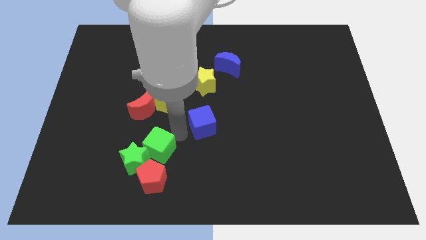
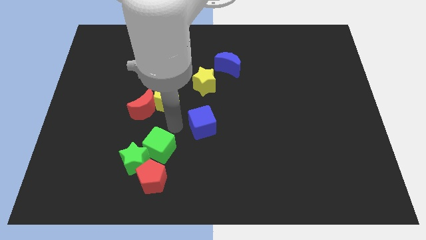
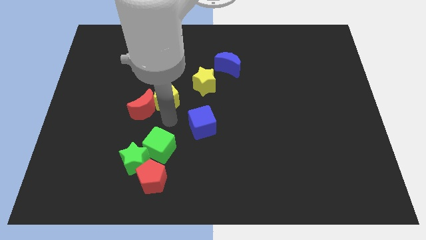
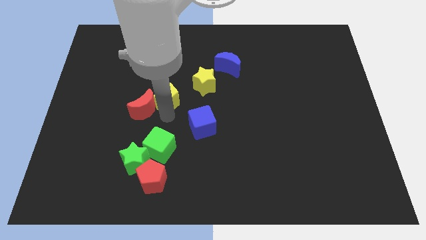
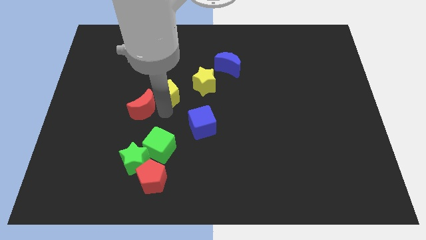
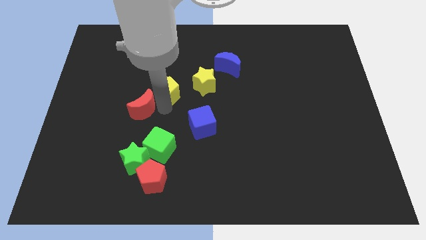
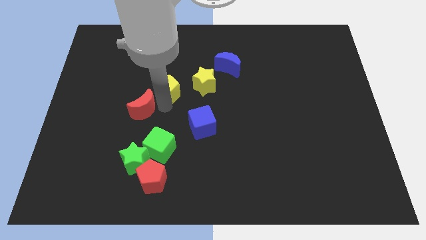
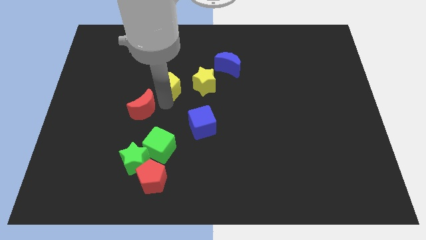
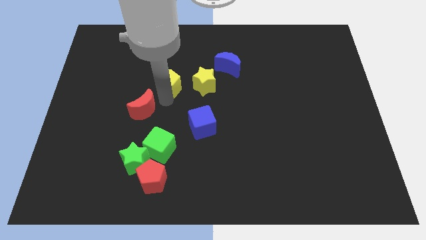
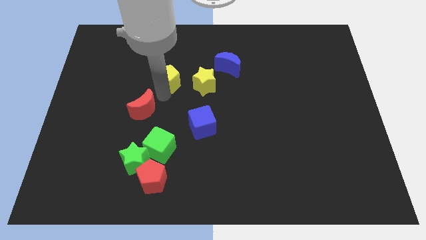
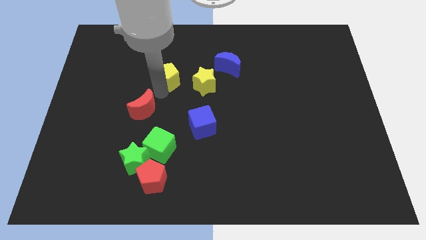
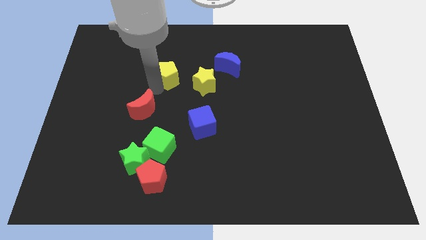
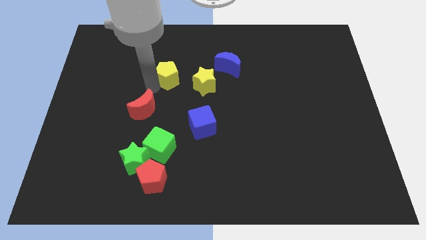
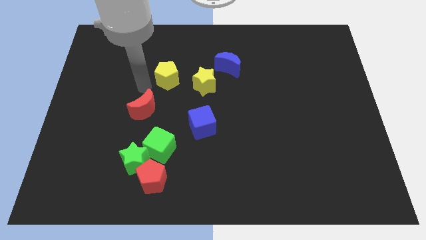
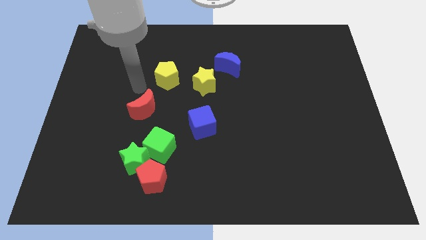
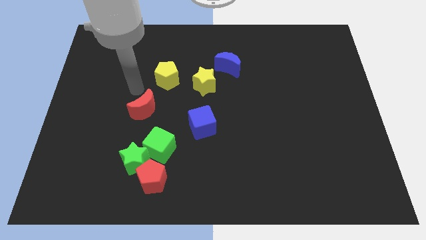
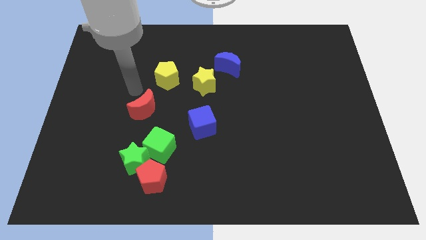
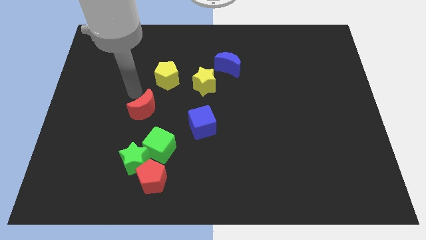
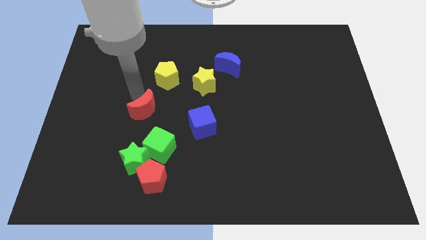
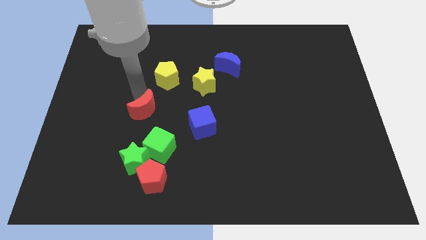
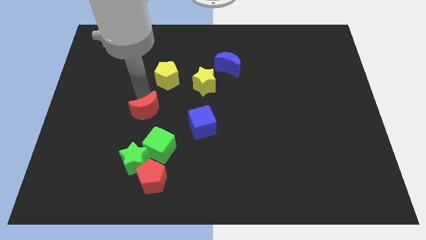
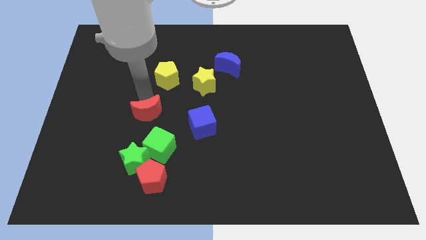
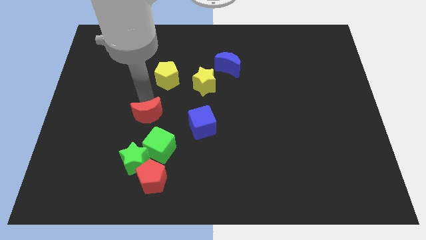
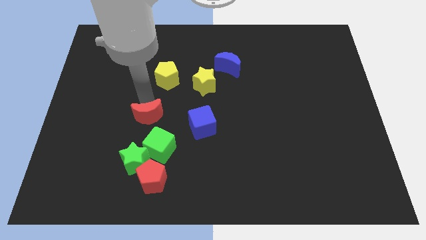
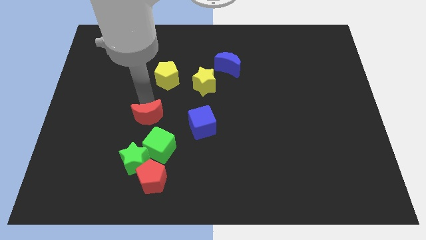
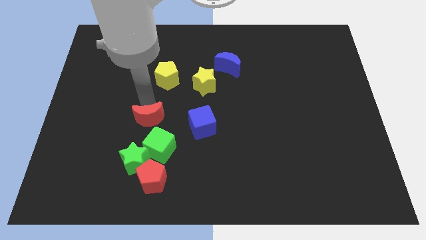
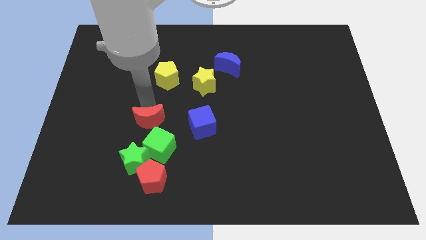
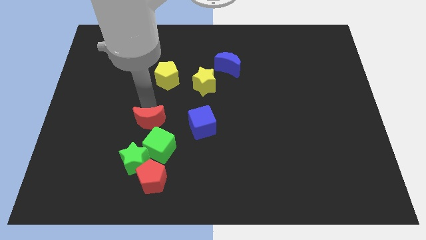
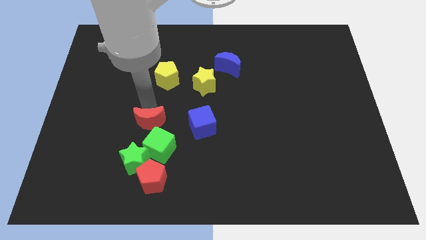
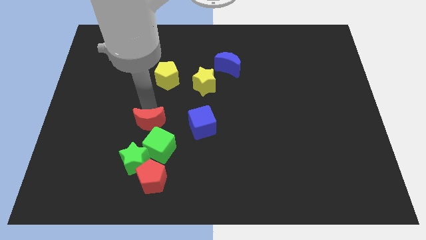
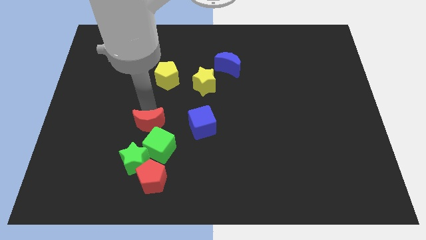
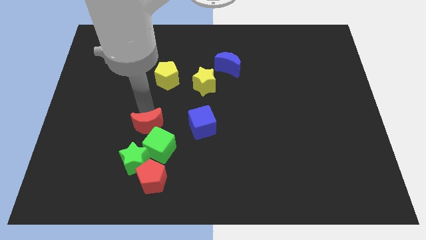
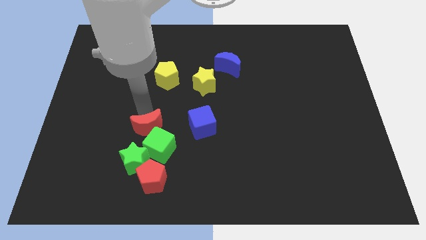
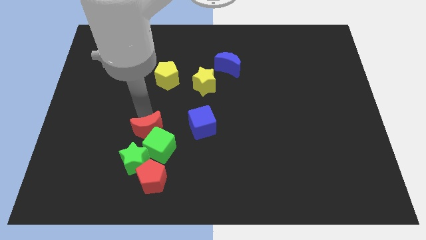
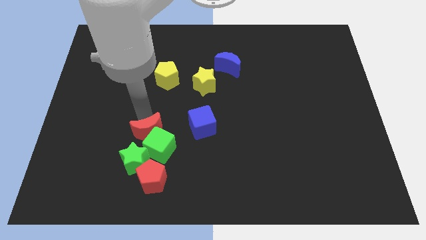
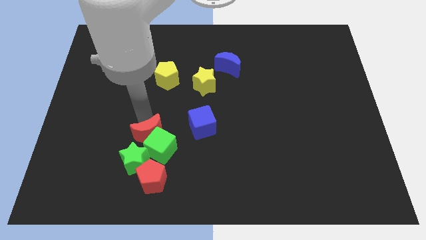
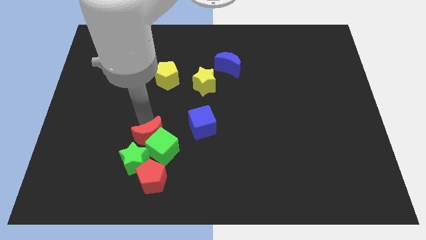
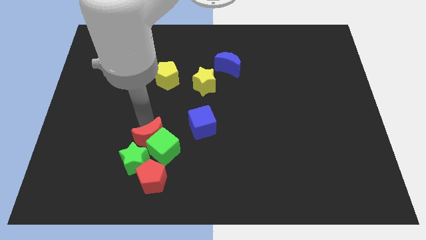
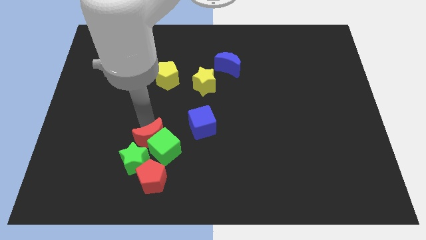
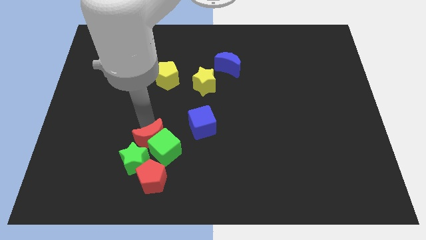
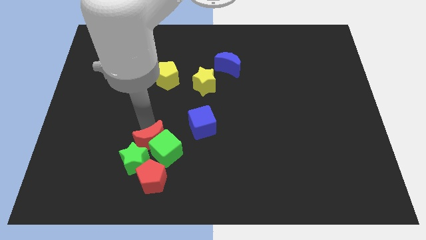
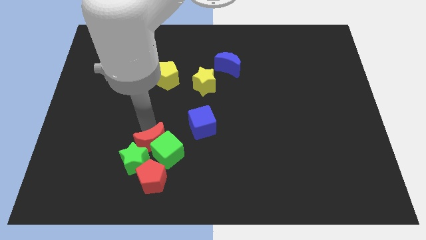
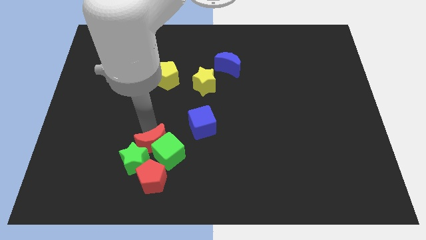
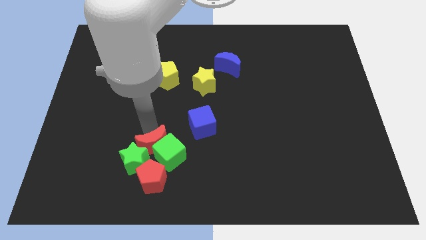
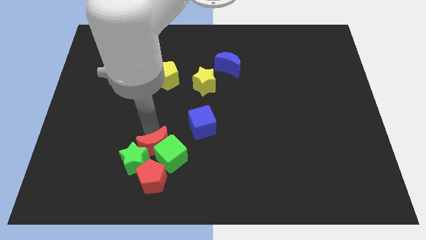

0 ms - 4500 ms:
push red crescent into green cube along with yellow pentagon

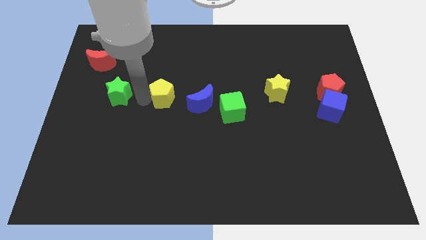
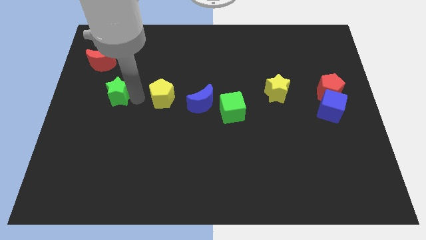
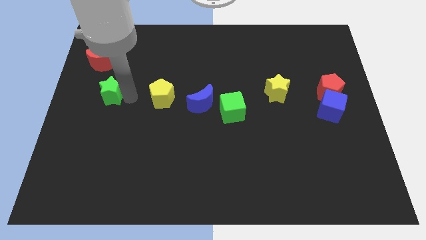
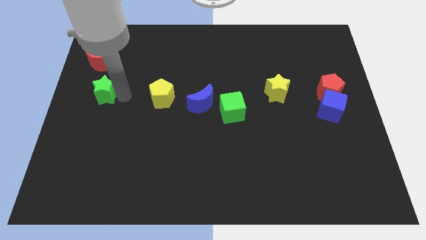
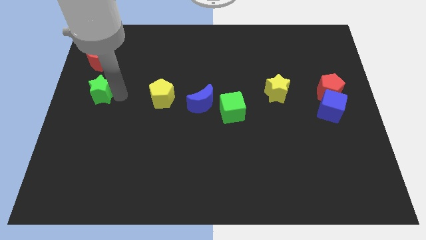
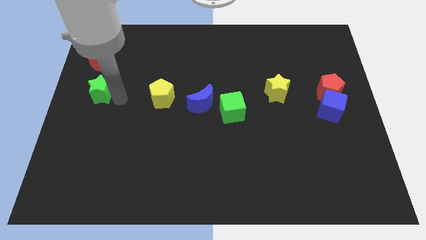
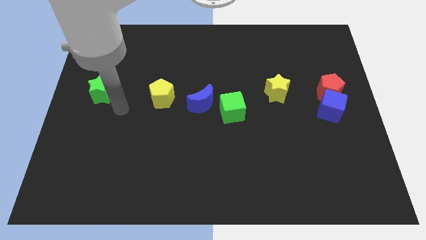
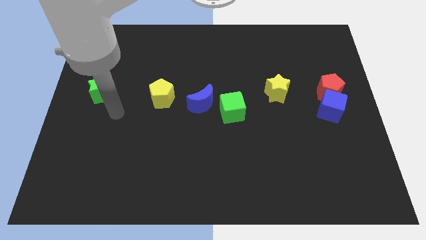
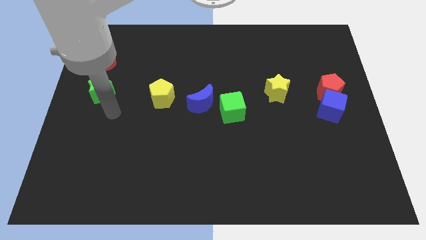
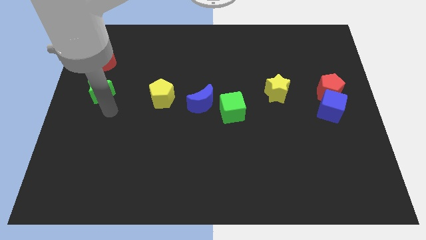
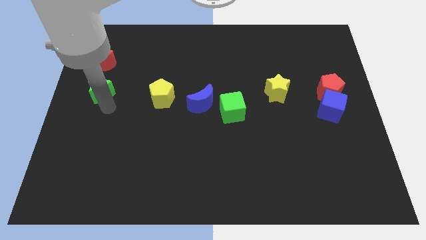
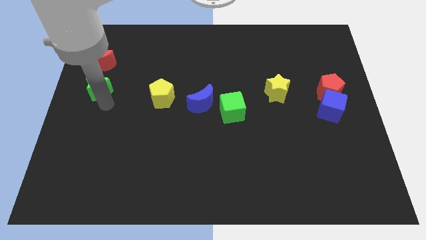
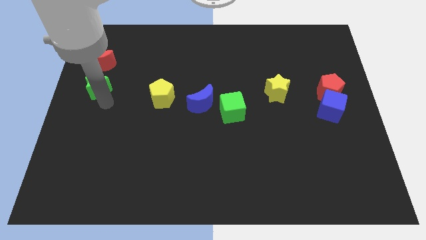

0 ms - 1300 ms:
place the green star below the red crescent

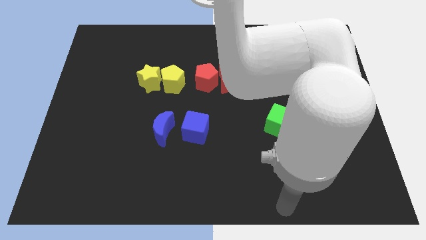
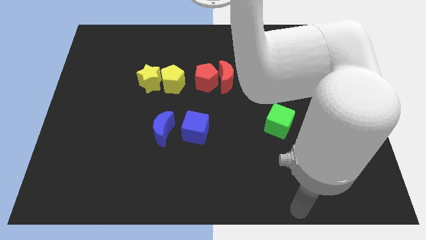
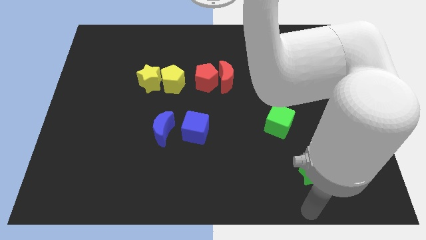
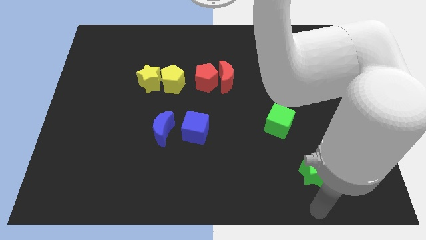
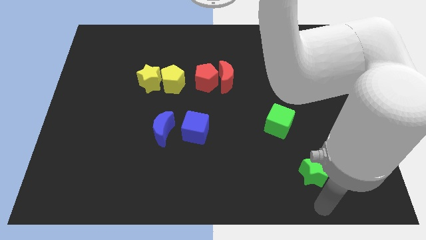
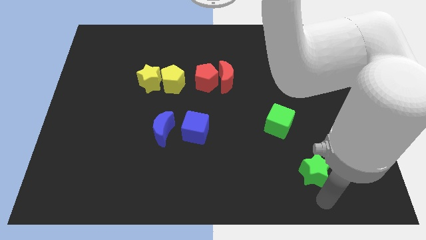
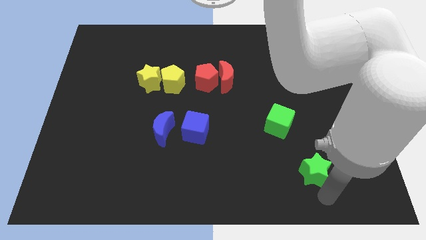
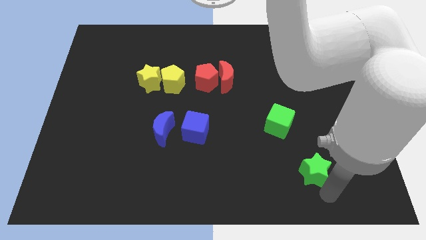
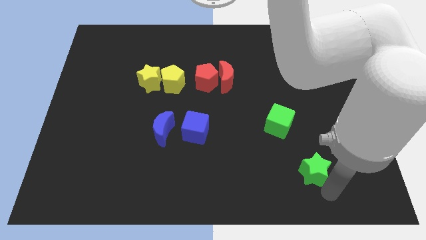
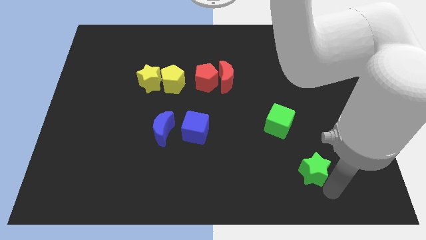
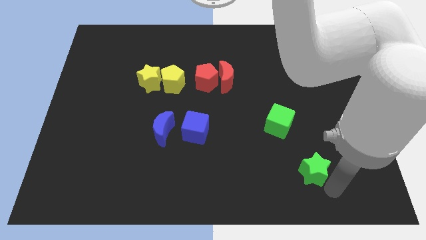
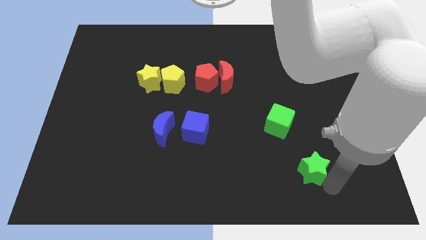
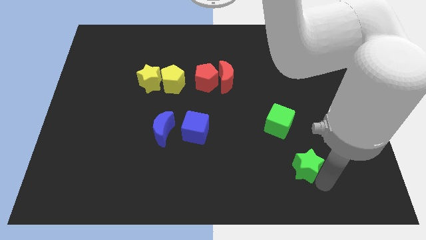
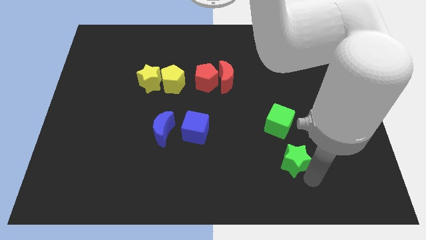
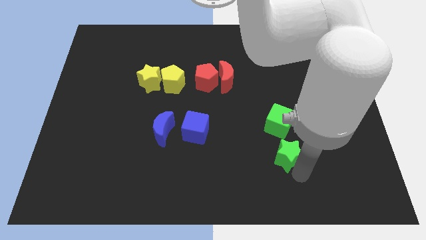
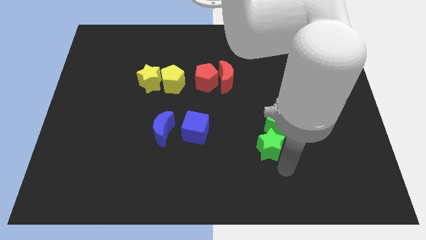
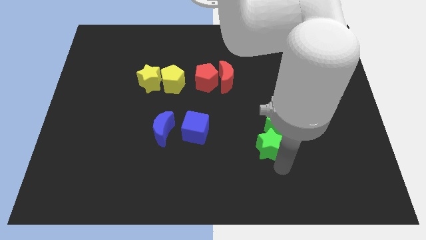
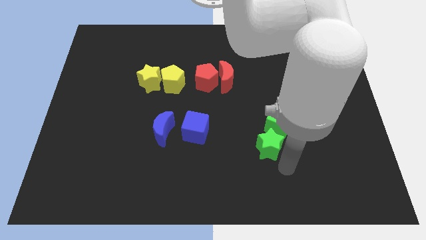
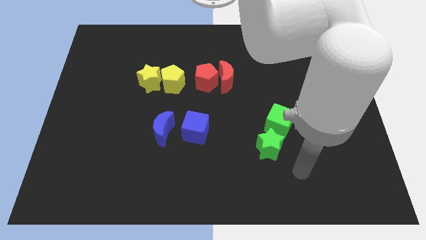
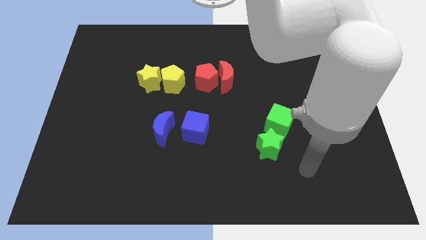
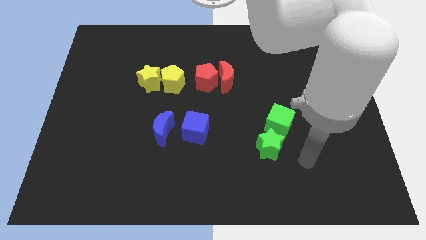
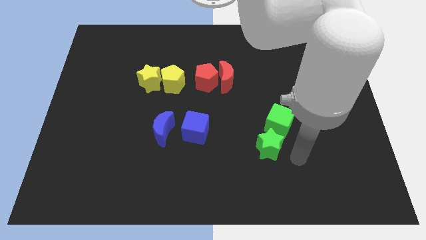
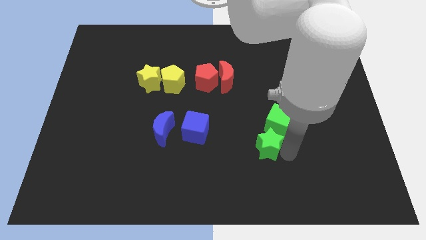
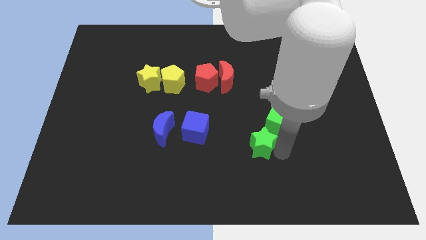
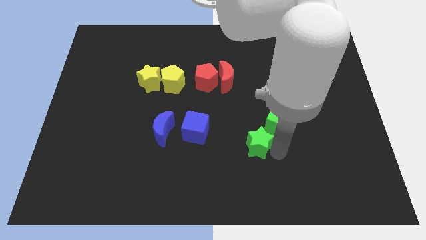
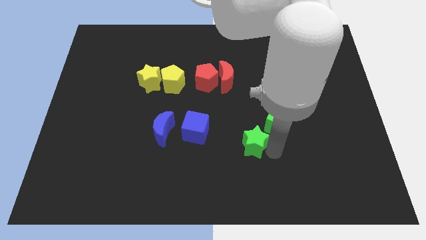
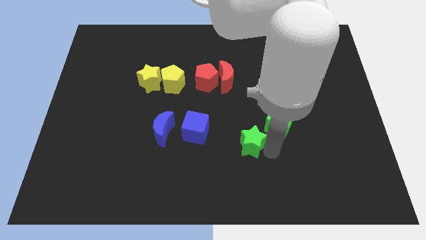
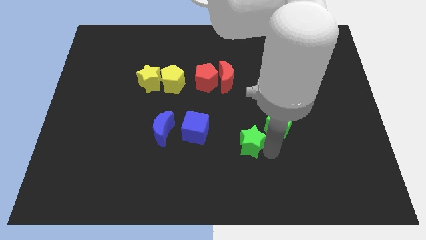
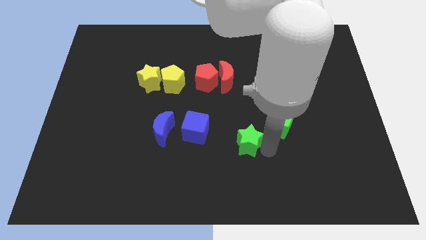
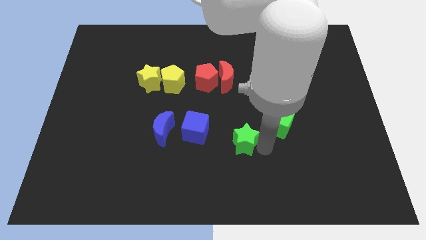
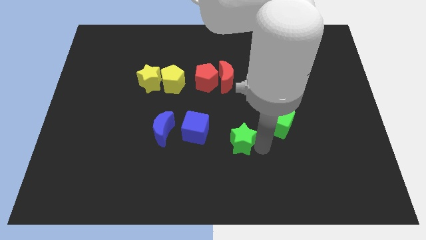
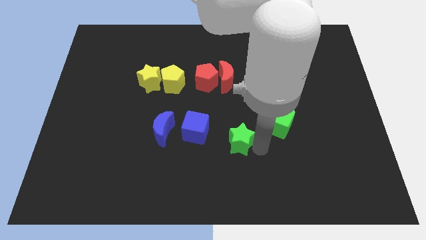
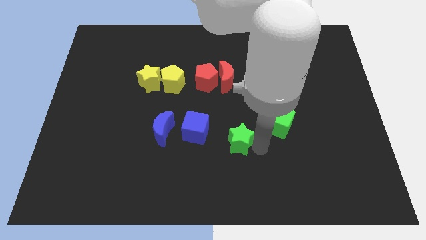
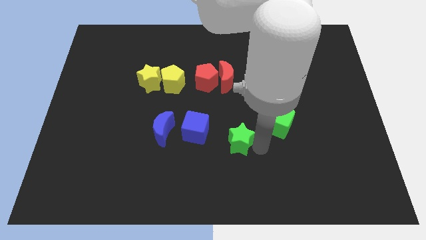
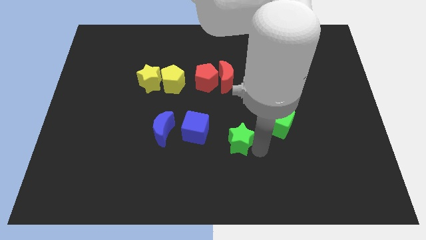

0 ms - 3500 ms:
push the green star towards the right side of the blue cube
